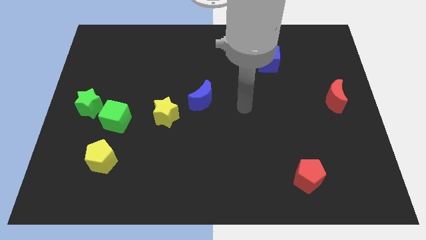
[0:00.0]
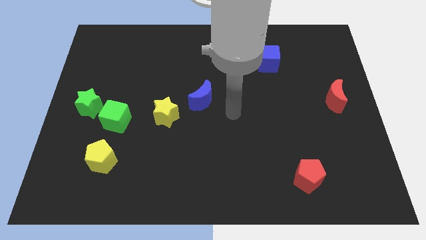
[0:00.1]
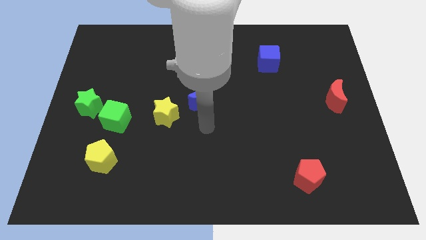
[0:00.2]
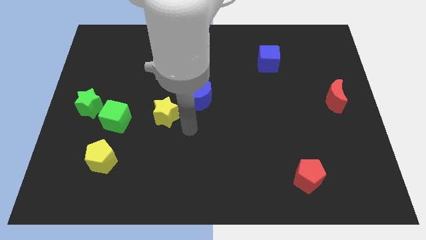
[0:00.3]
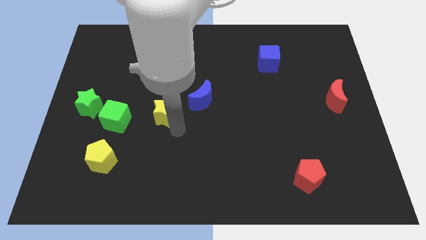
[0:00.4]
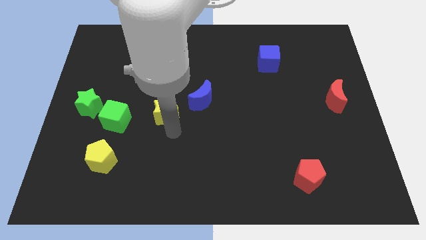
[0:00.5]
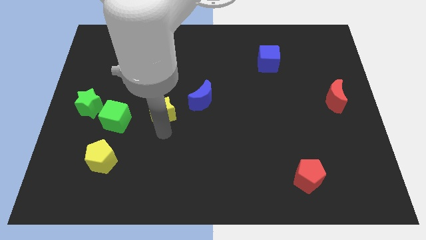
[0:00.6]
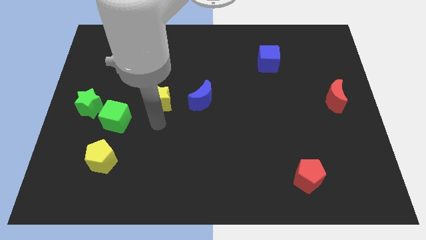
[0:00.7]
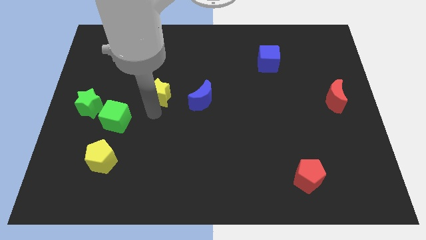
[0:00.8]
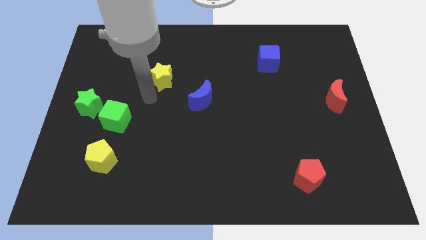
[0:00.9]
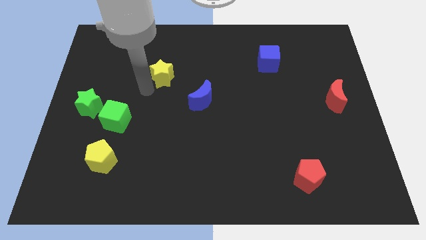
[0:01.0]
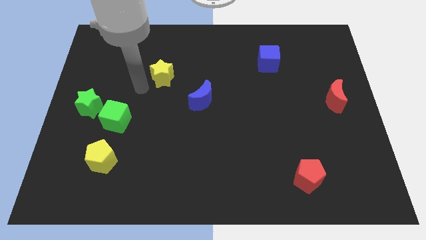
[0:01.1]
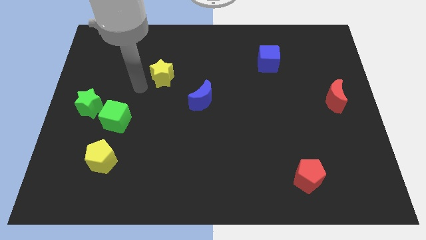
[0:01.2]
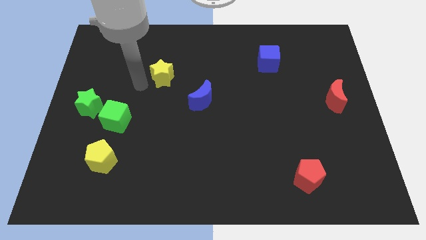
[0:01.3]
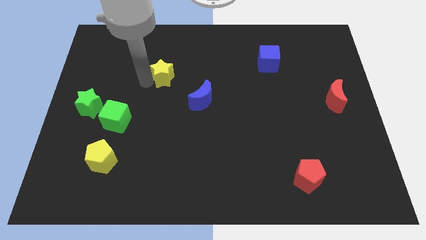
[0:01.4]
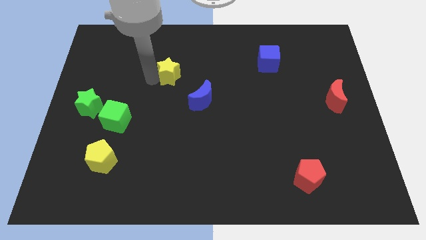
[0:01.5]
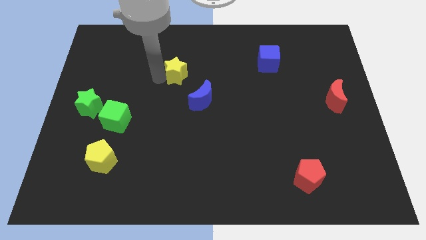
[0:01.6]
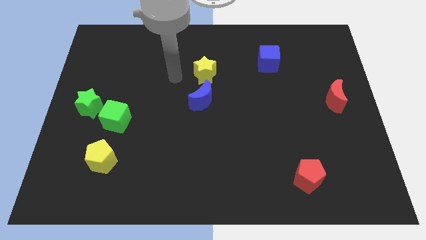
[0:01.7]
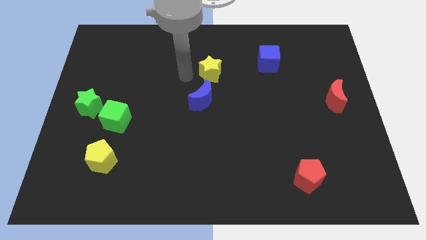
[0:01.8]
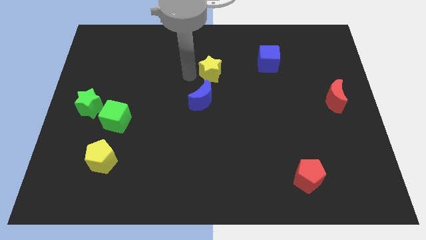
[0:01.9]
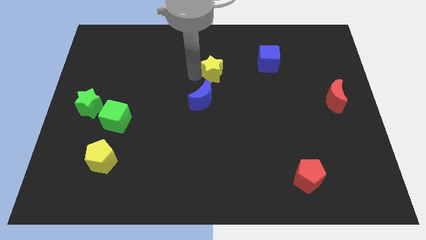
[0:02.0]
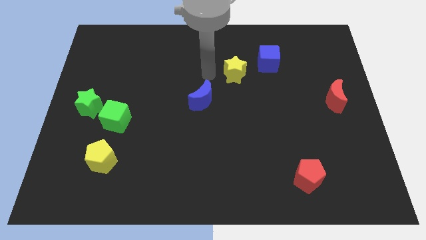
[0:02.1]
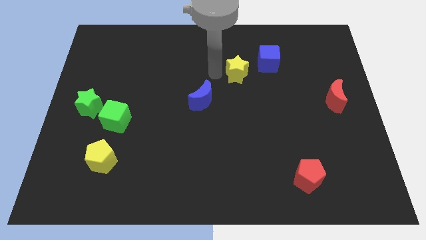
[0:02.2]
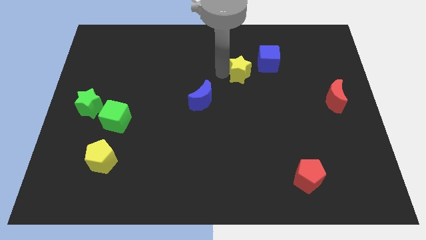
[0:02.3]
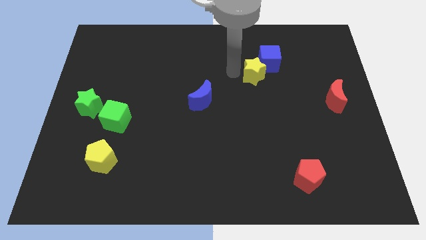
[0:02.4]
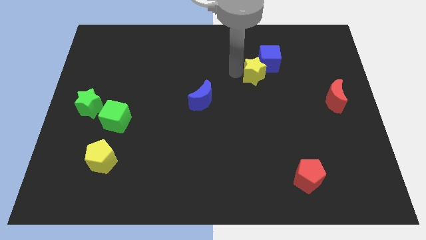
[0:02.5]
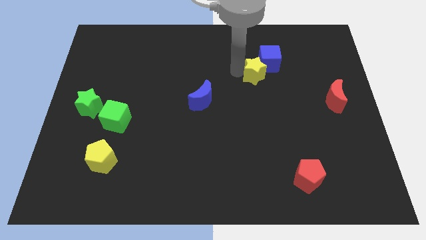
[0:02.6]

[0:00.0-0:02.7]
put the yellow star next to the blue cube

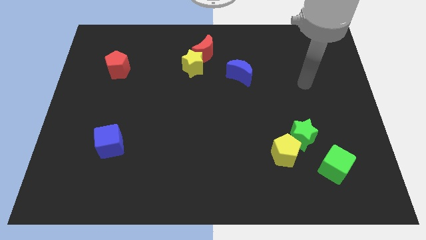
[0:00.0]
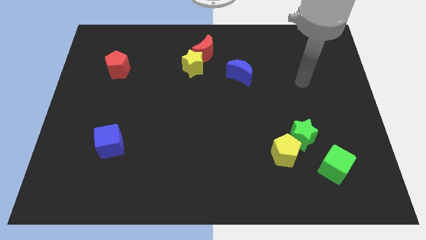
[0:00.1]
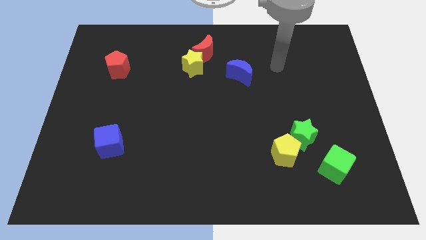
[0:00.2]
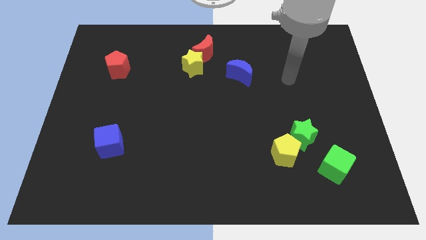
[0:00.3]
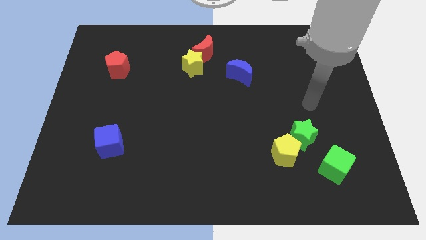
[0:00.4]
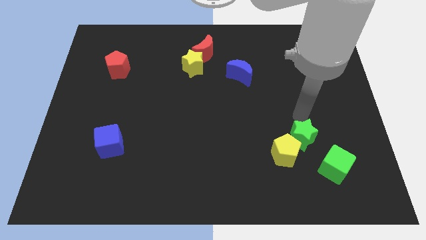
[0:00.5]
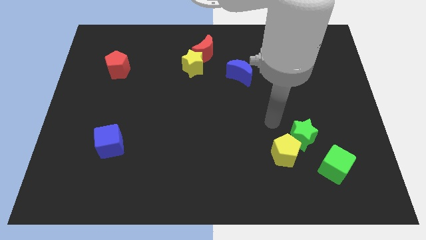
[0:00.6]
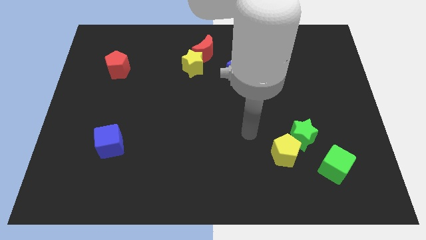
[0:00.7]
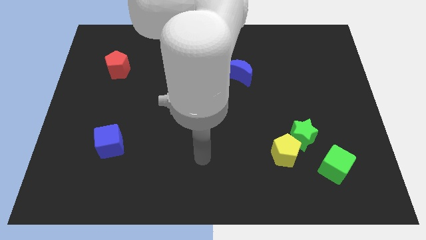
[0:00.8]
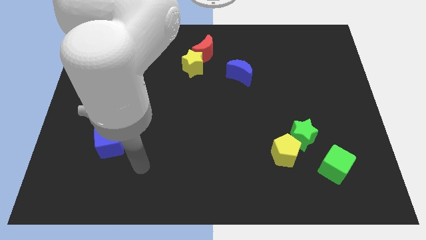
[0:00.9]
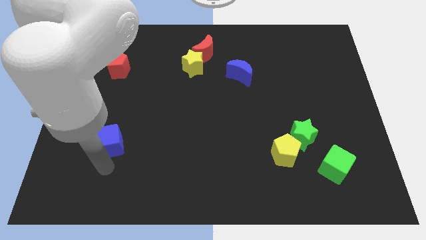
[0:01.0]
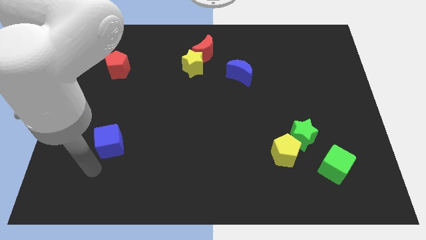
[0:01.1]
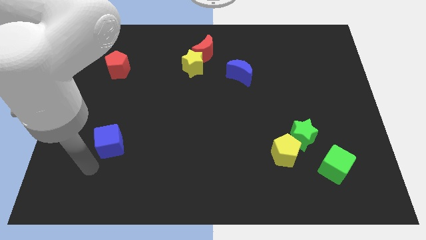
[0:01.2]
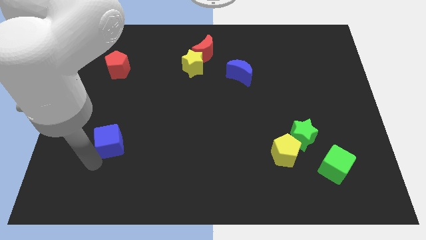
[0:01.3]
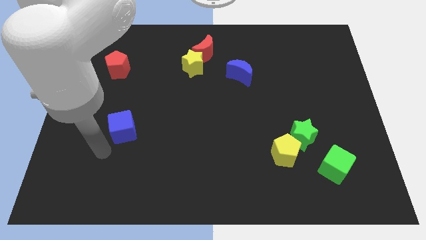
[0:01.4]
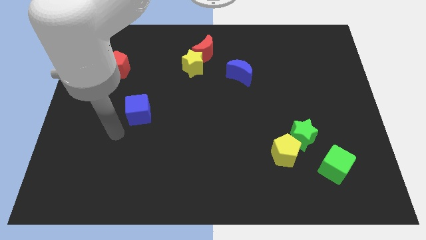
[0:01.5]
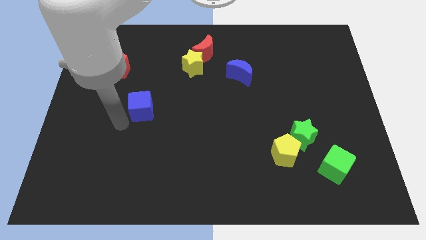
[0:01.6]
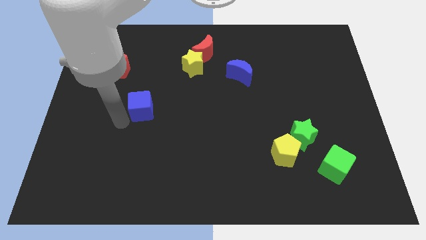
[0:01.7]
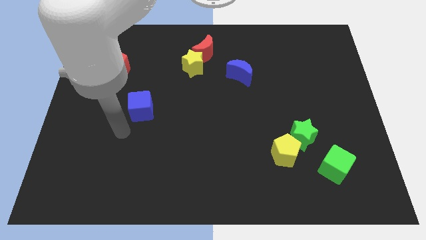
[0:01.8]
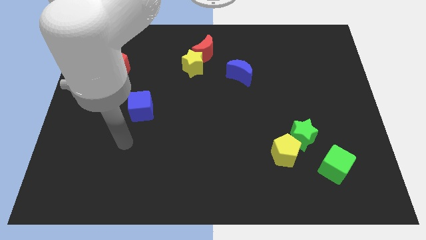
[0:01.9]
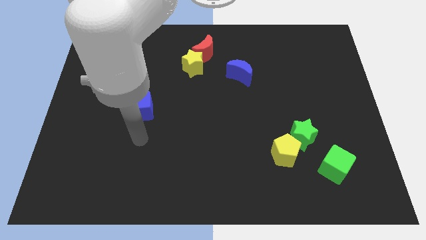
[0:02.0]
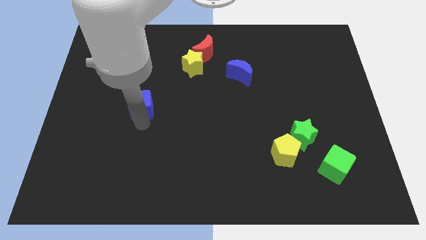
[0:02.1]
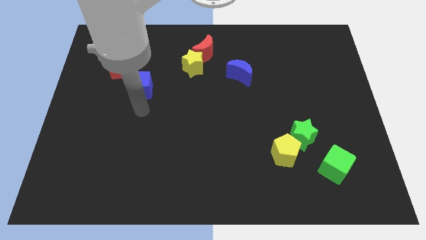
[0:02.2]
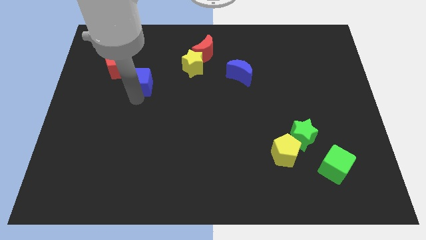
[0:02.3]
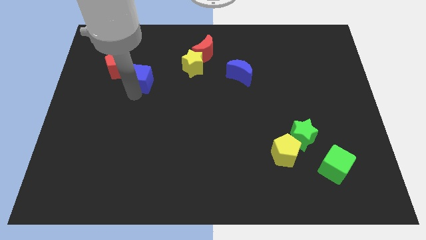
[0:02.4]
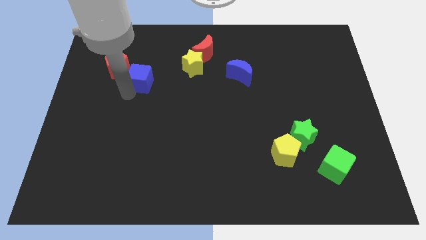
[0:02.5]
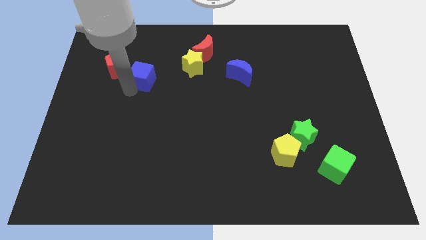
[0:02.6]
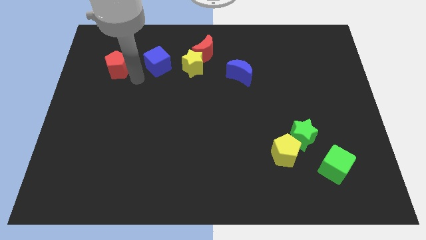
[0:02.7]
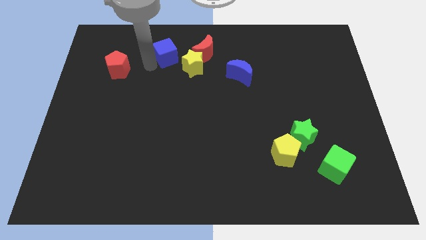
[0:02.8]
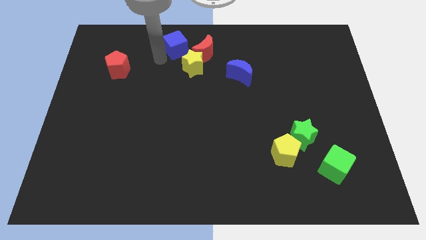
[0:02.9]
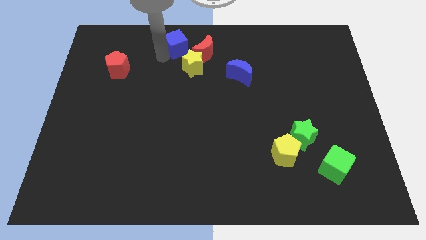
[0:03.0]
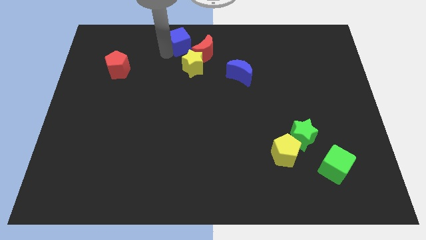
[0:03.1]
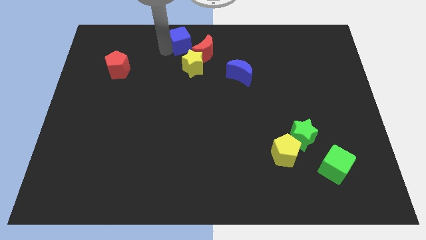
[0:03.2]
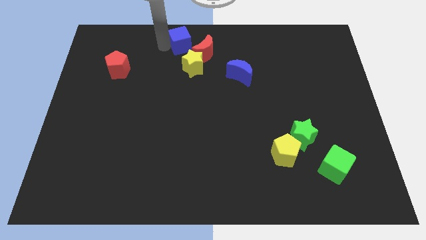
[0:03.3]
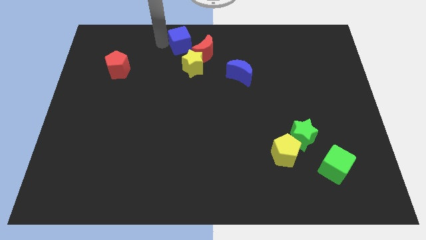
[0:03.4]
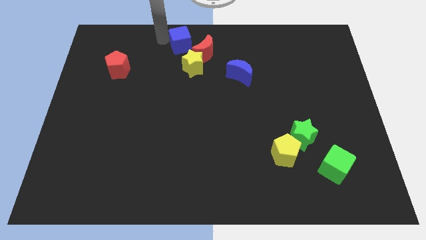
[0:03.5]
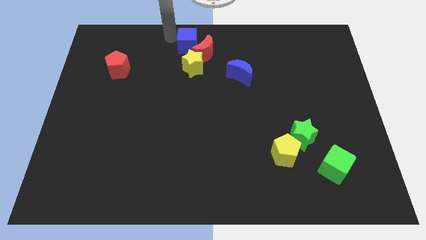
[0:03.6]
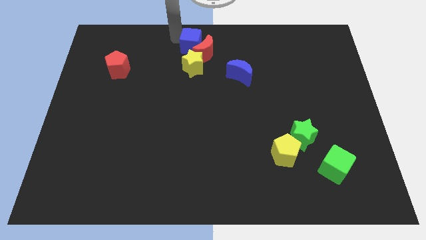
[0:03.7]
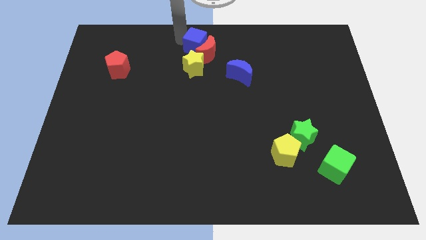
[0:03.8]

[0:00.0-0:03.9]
slide the blue cube next to the red moon

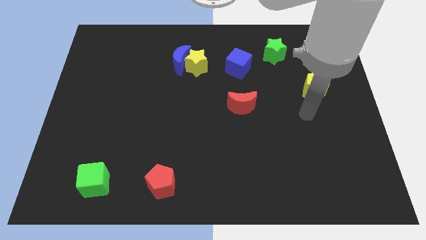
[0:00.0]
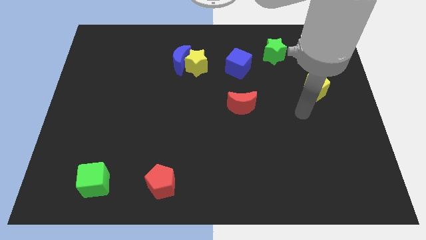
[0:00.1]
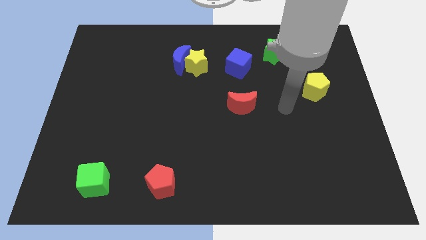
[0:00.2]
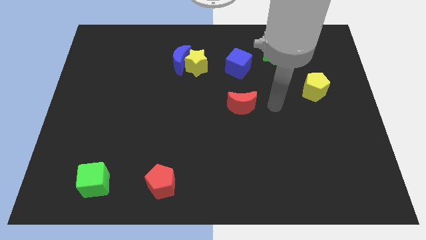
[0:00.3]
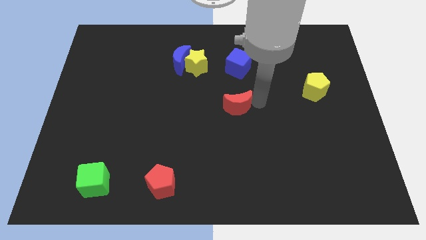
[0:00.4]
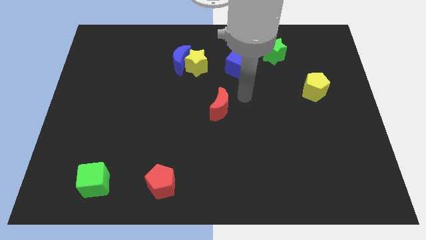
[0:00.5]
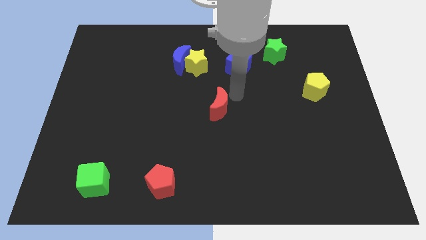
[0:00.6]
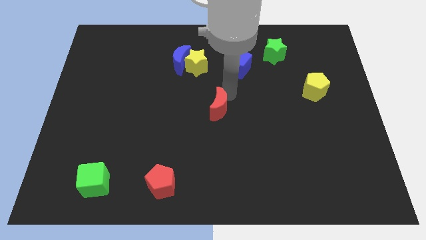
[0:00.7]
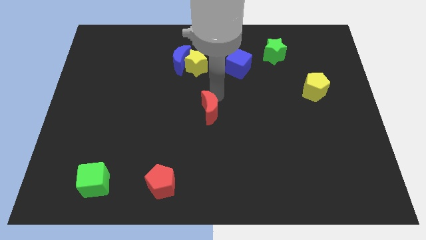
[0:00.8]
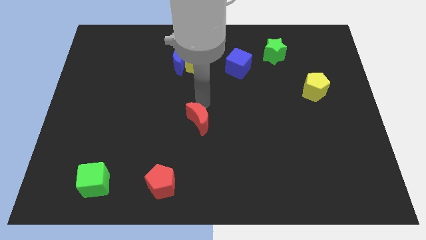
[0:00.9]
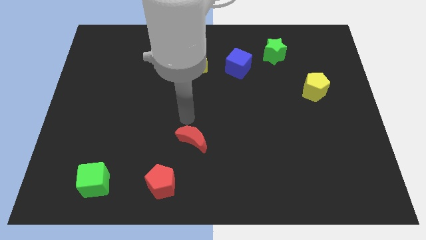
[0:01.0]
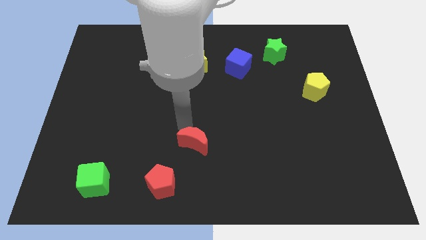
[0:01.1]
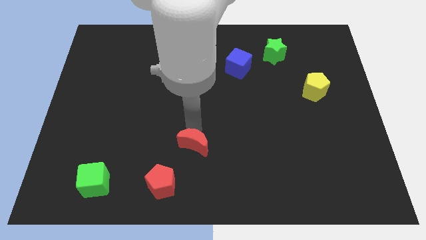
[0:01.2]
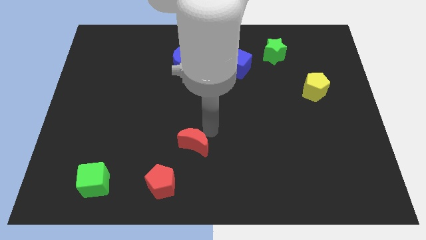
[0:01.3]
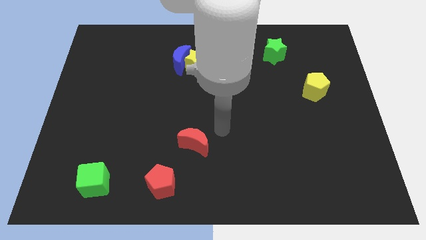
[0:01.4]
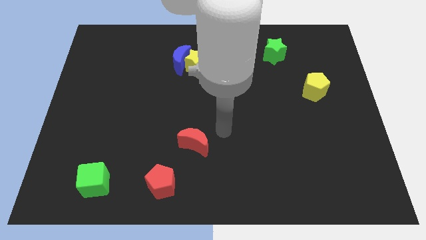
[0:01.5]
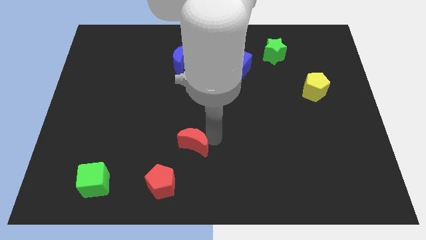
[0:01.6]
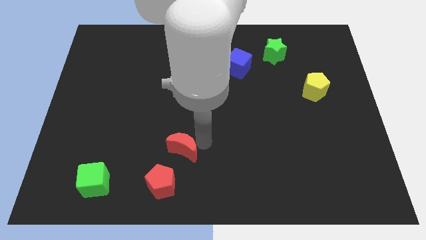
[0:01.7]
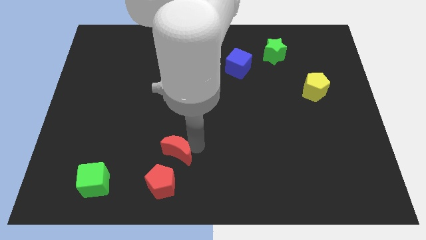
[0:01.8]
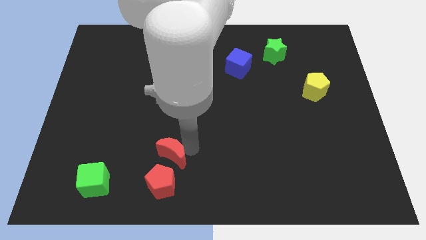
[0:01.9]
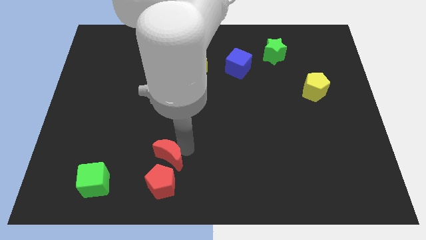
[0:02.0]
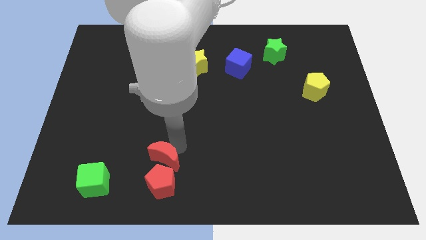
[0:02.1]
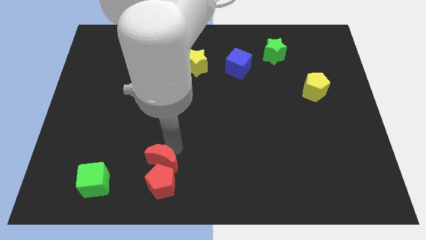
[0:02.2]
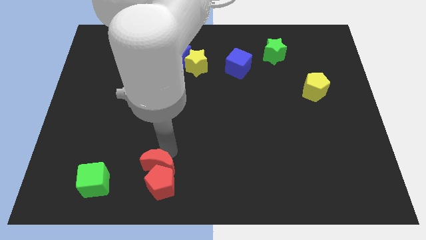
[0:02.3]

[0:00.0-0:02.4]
slide the red moon to the red pentagon
